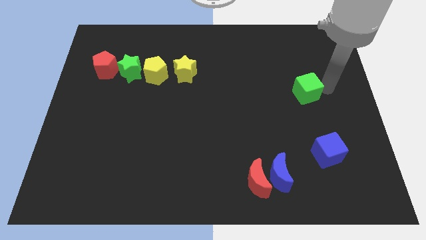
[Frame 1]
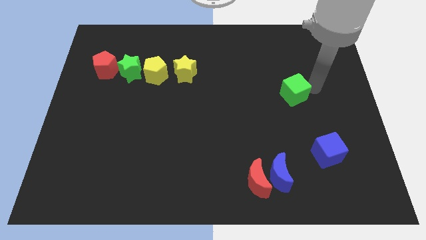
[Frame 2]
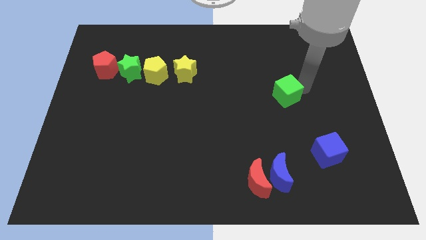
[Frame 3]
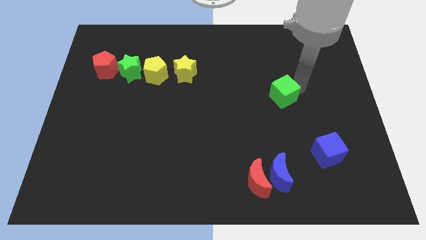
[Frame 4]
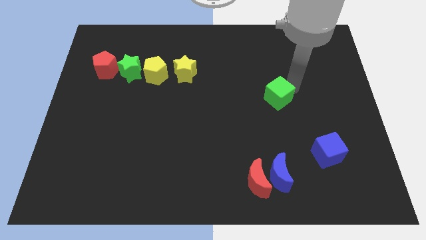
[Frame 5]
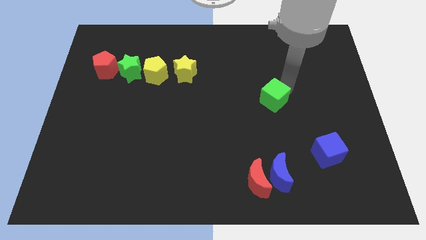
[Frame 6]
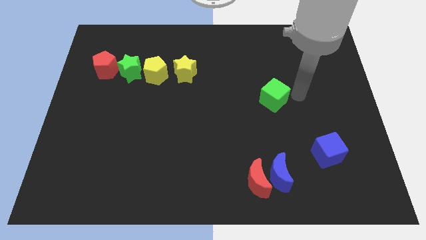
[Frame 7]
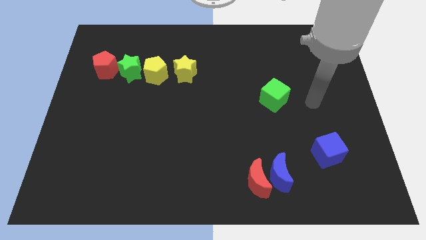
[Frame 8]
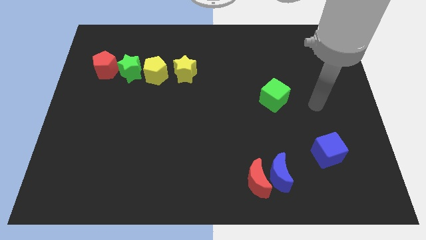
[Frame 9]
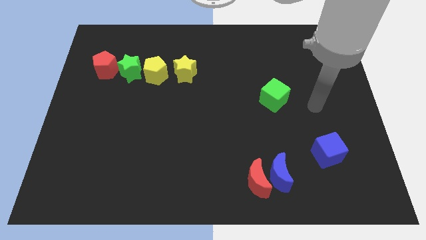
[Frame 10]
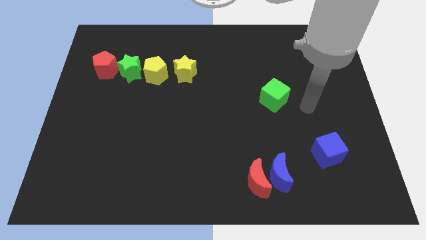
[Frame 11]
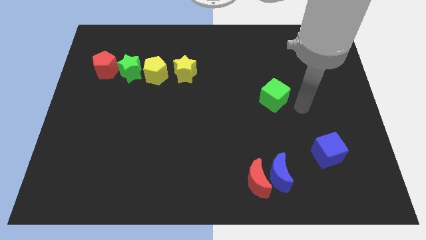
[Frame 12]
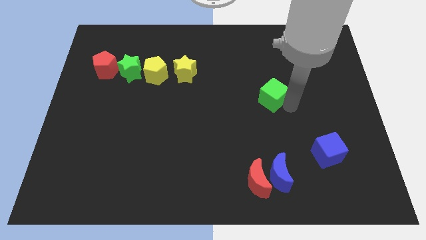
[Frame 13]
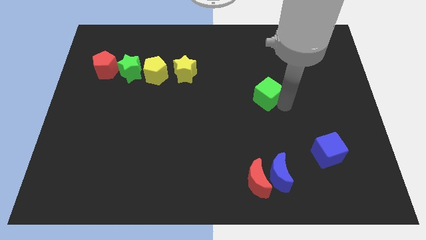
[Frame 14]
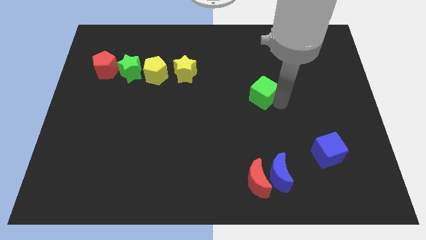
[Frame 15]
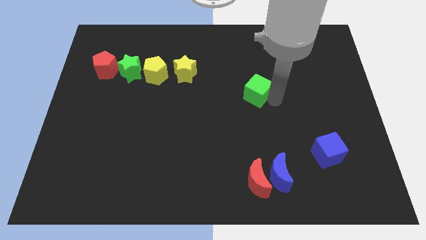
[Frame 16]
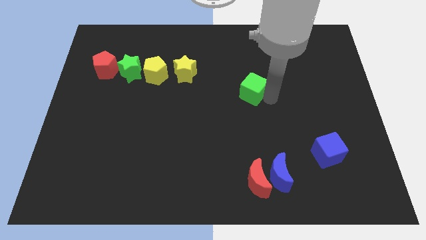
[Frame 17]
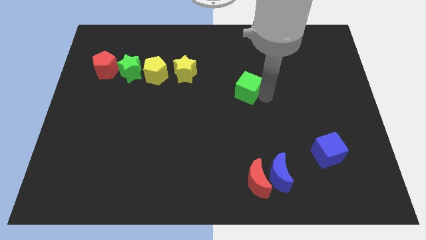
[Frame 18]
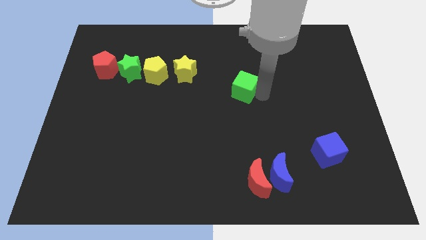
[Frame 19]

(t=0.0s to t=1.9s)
slide the green cube slightly to the left

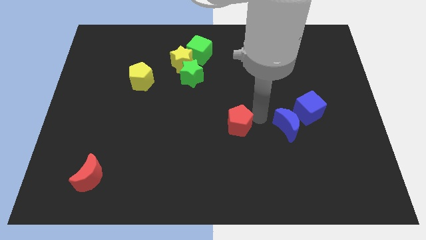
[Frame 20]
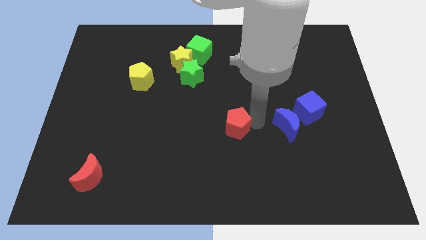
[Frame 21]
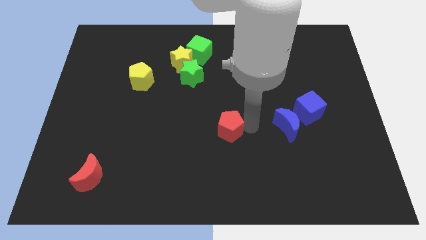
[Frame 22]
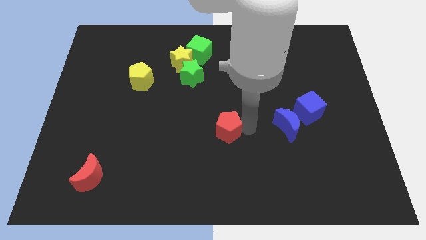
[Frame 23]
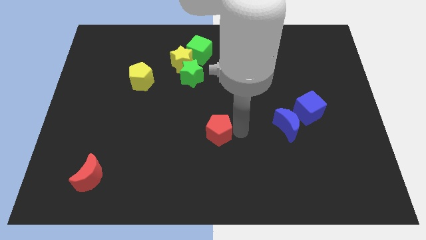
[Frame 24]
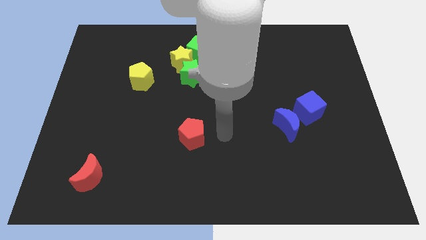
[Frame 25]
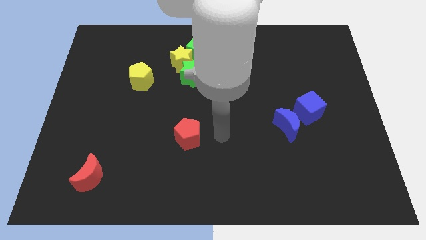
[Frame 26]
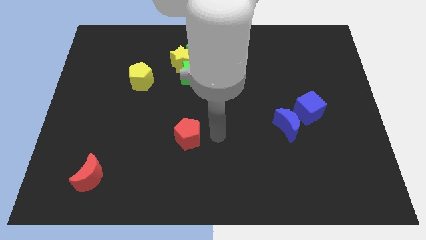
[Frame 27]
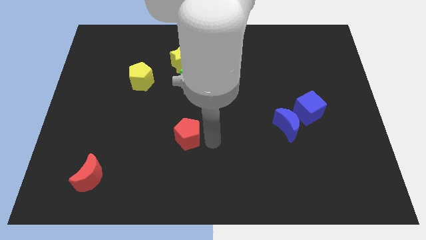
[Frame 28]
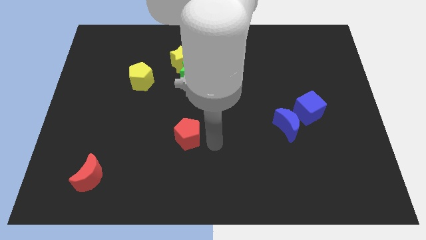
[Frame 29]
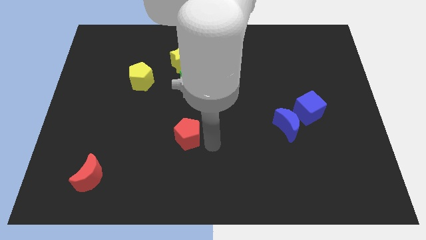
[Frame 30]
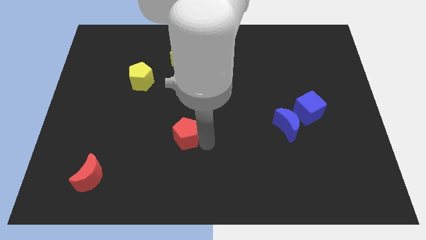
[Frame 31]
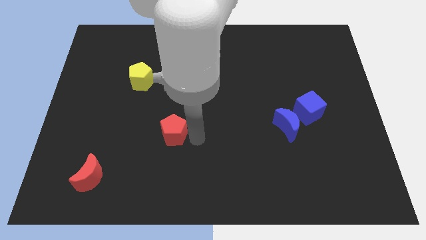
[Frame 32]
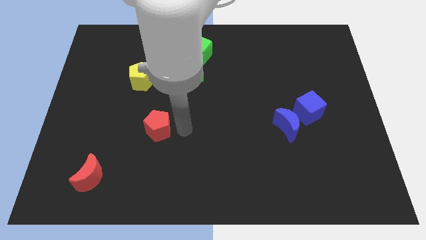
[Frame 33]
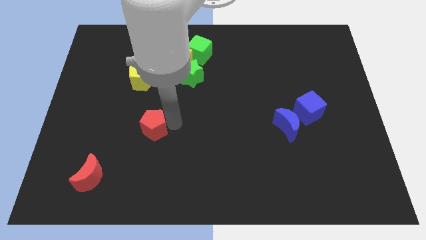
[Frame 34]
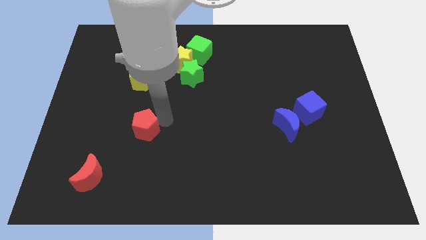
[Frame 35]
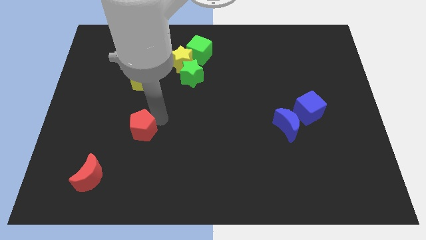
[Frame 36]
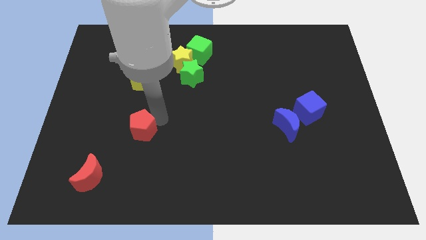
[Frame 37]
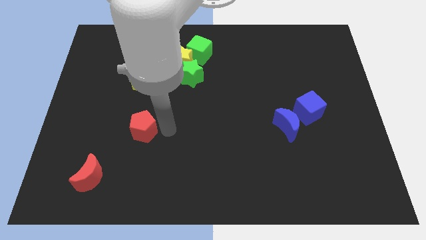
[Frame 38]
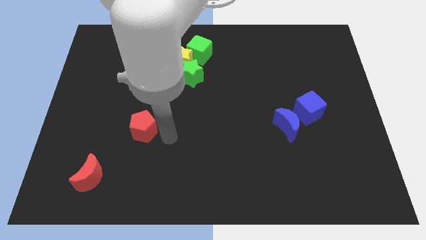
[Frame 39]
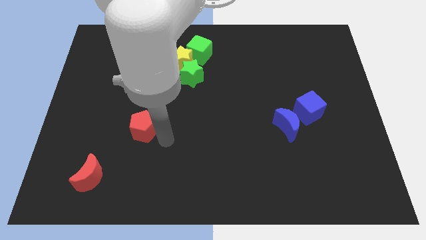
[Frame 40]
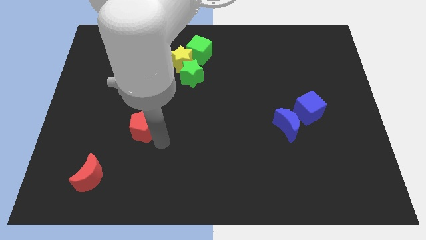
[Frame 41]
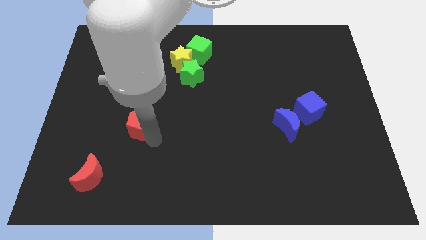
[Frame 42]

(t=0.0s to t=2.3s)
place the red pentagon below the yellow pentagon

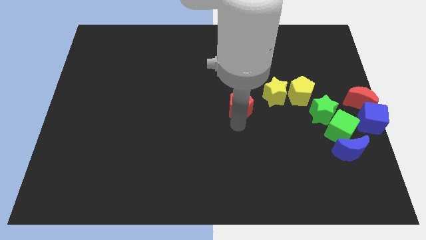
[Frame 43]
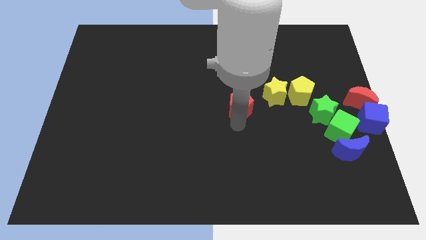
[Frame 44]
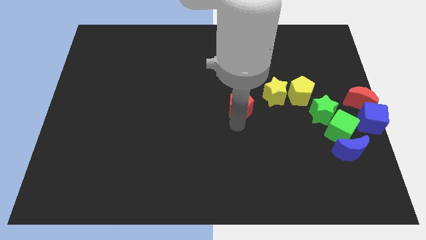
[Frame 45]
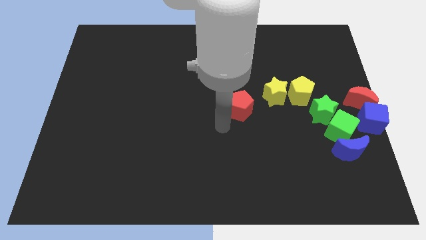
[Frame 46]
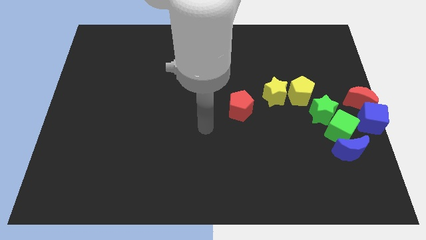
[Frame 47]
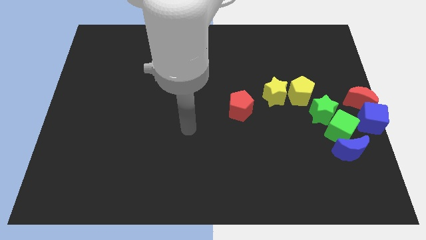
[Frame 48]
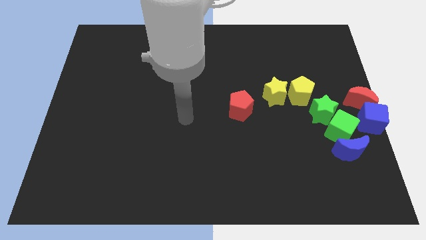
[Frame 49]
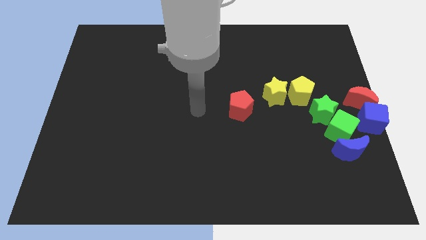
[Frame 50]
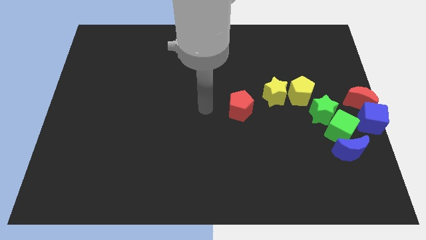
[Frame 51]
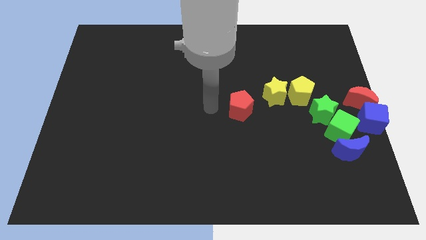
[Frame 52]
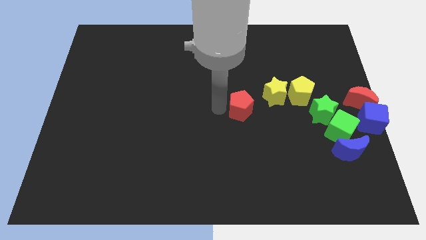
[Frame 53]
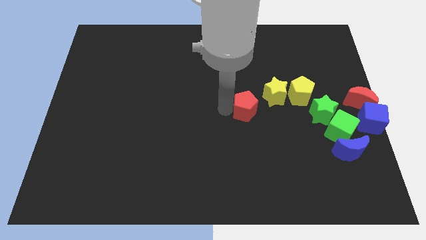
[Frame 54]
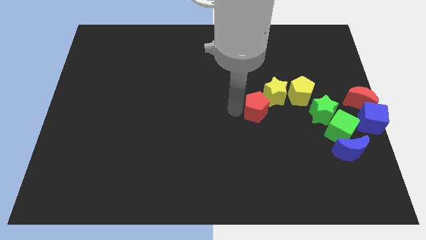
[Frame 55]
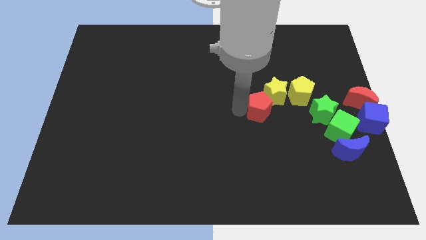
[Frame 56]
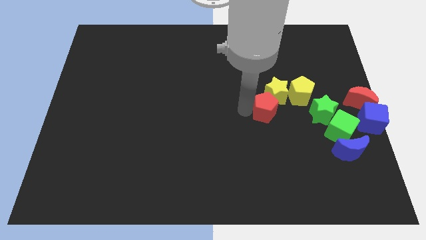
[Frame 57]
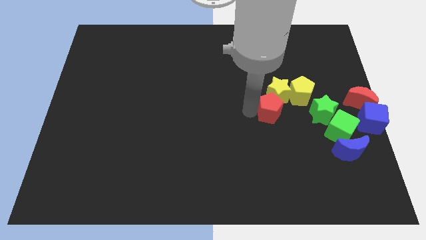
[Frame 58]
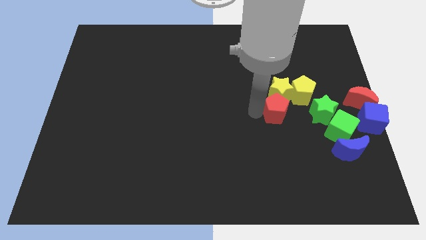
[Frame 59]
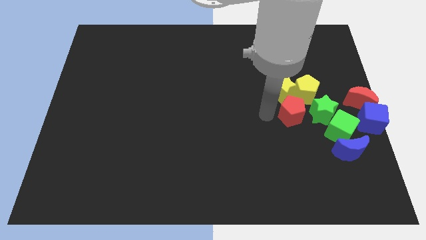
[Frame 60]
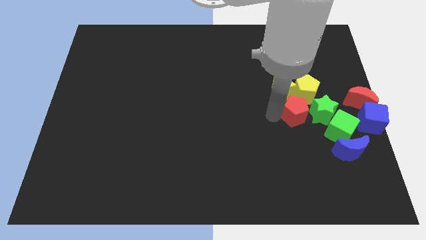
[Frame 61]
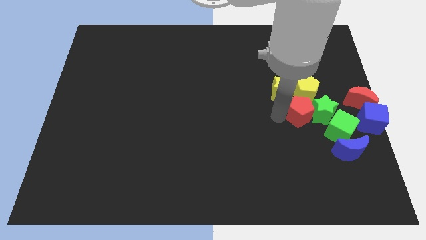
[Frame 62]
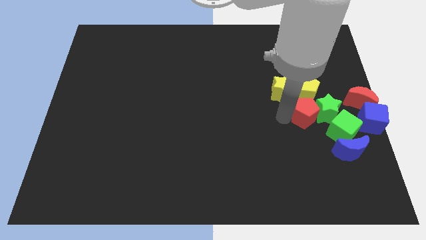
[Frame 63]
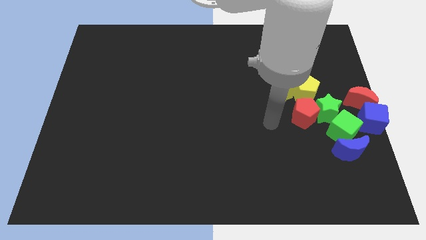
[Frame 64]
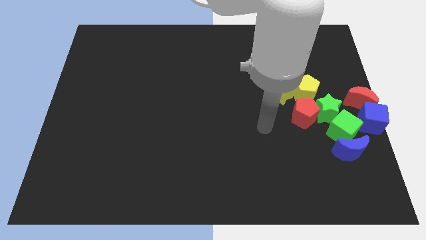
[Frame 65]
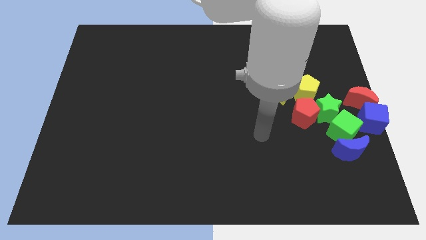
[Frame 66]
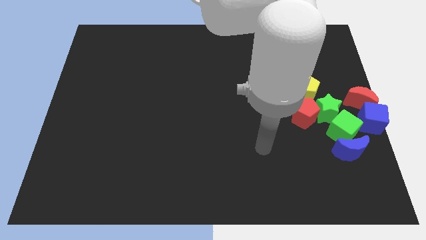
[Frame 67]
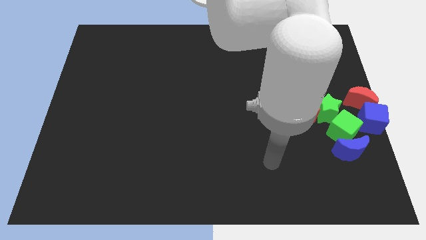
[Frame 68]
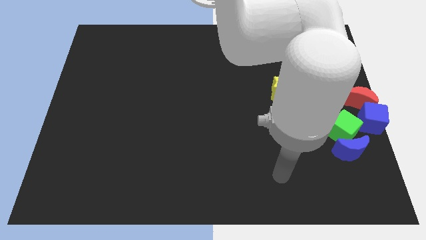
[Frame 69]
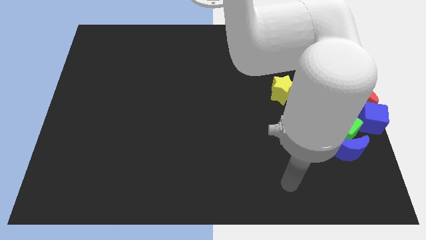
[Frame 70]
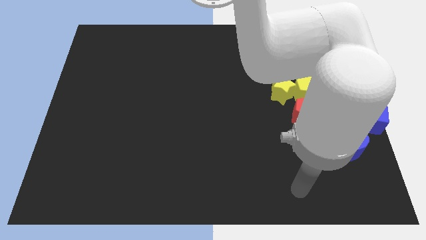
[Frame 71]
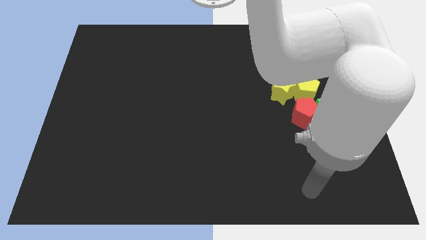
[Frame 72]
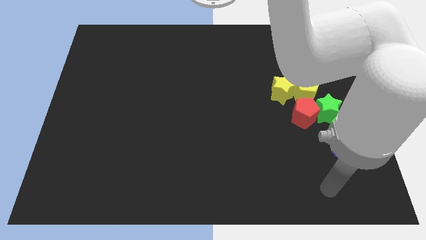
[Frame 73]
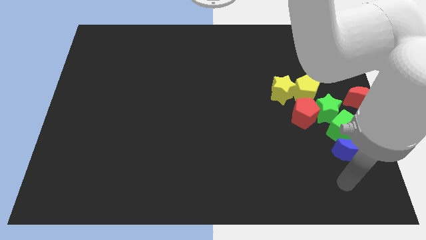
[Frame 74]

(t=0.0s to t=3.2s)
place the red pentagon vertically below the yellow pentagon

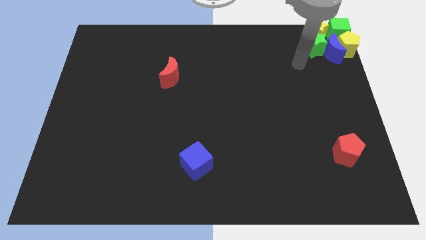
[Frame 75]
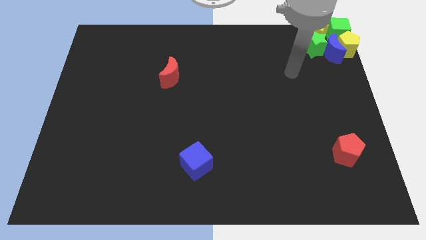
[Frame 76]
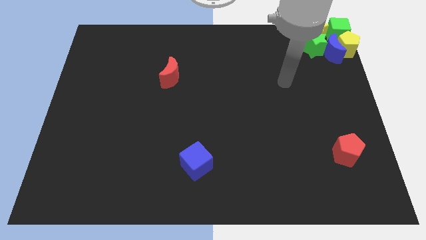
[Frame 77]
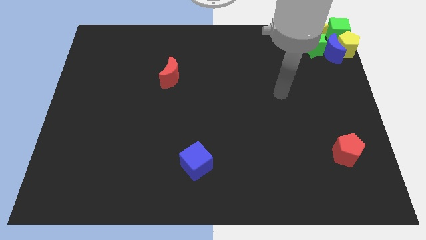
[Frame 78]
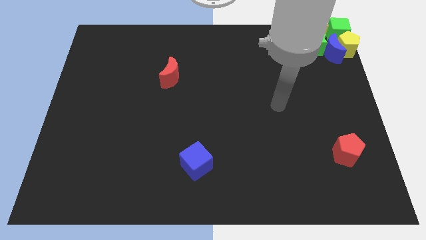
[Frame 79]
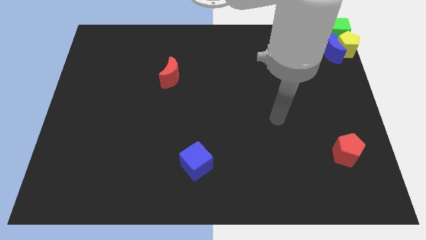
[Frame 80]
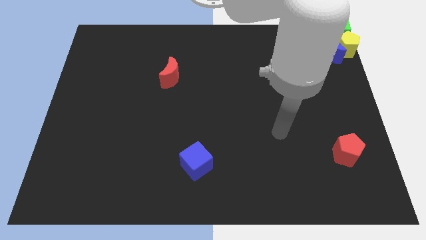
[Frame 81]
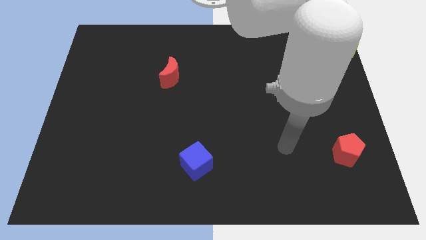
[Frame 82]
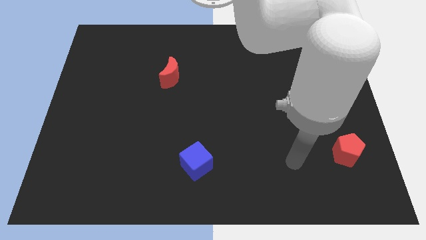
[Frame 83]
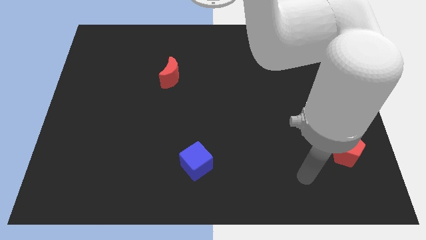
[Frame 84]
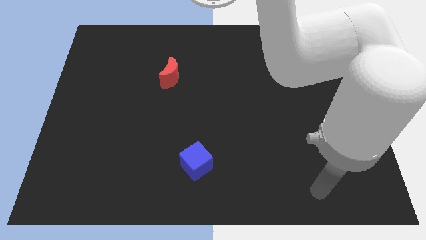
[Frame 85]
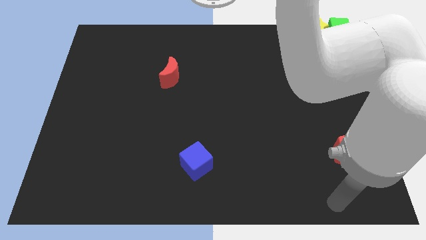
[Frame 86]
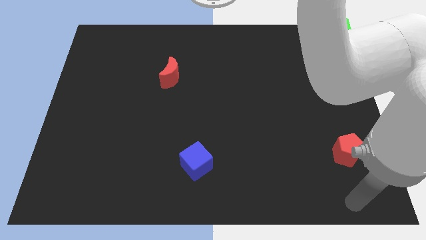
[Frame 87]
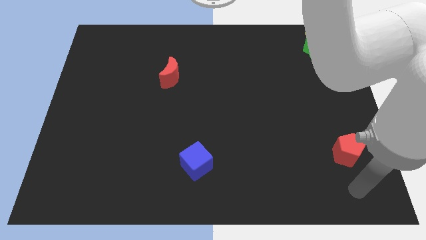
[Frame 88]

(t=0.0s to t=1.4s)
move your arm away from the green star

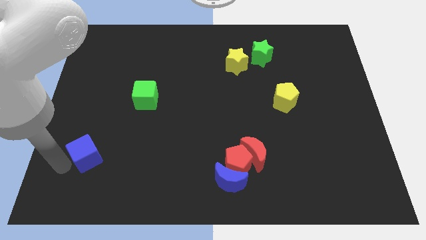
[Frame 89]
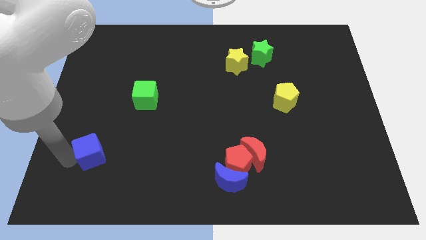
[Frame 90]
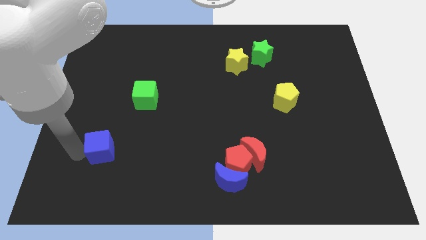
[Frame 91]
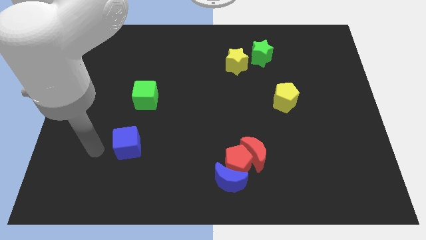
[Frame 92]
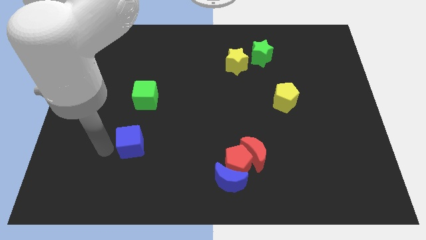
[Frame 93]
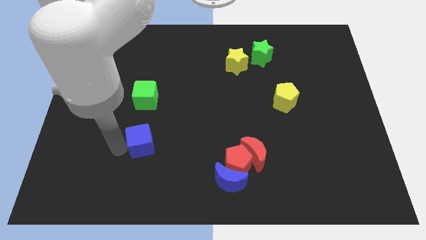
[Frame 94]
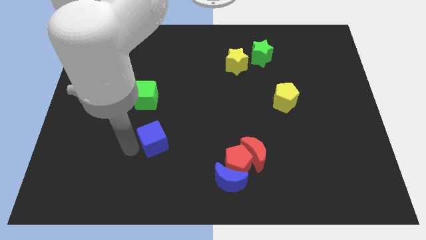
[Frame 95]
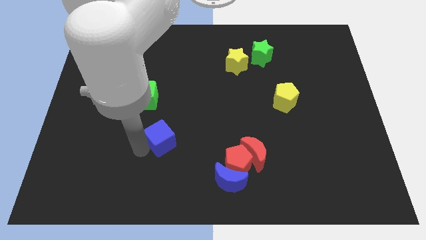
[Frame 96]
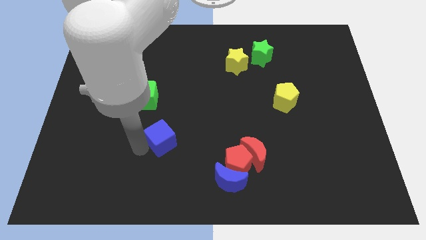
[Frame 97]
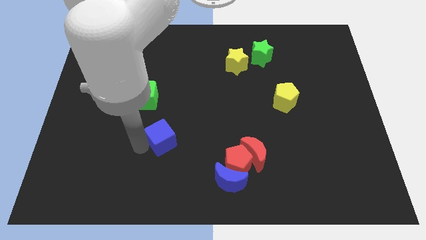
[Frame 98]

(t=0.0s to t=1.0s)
push the blue cube towards the bottom right side of the green cube
